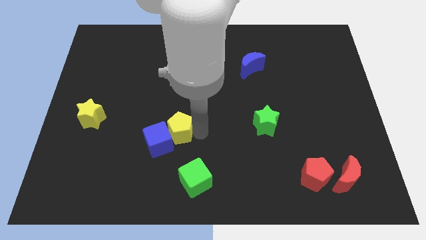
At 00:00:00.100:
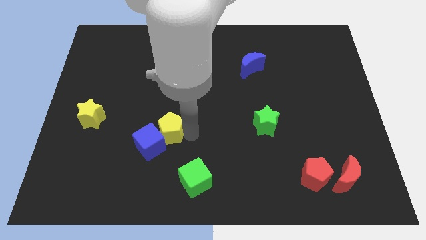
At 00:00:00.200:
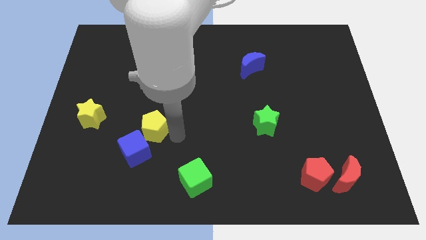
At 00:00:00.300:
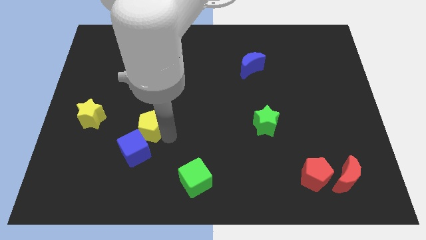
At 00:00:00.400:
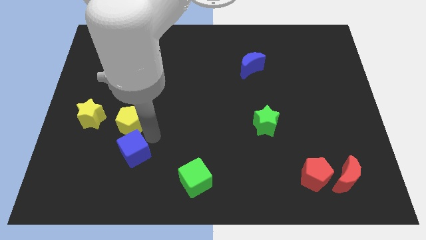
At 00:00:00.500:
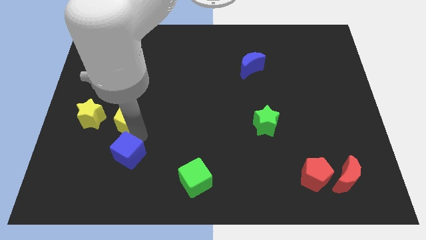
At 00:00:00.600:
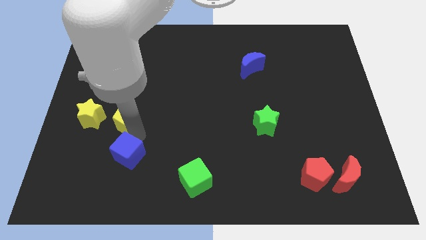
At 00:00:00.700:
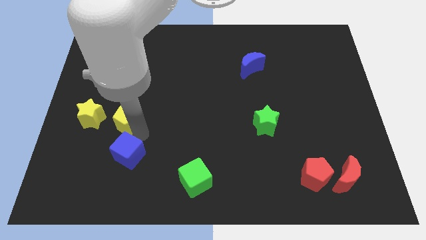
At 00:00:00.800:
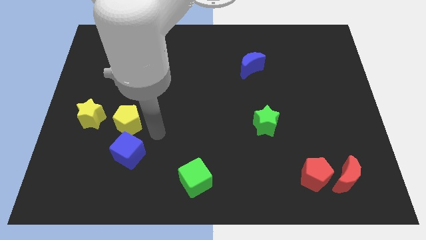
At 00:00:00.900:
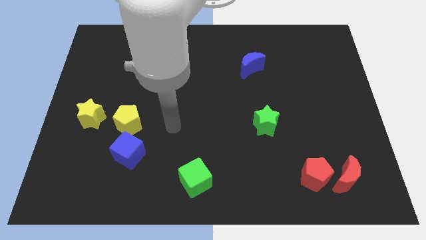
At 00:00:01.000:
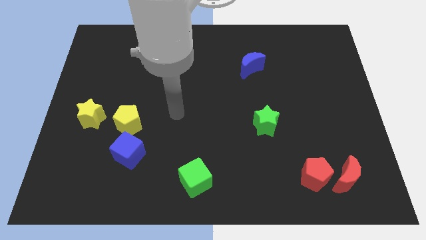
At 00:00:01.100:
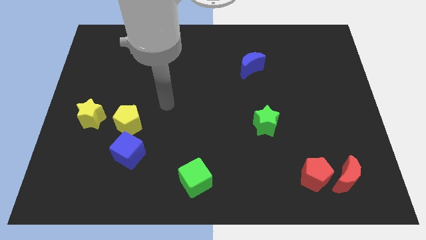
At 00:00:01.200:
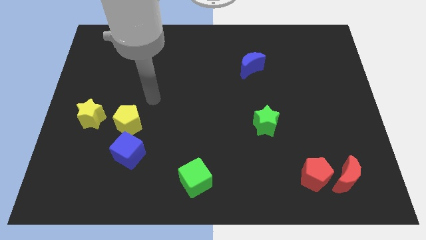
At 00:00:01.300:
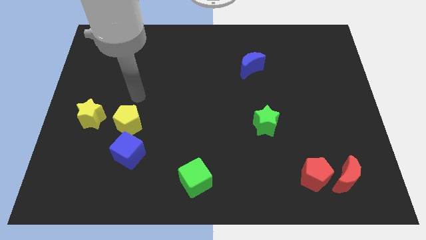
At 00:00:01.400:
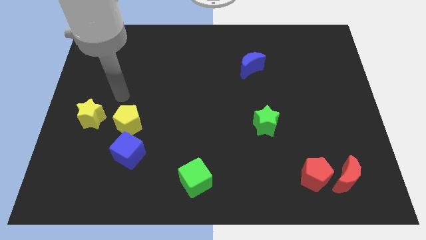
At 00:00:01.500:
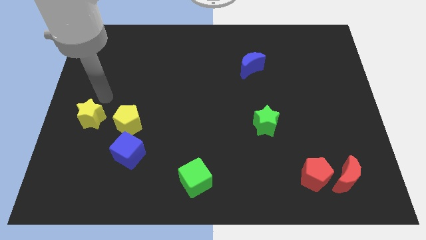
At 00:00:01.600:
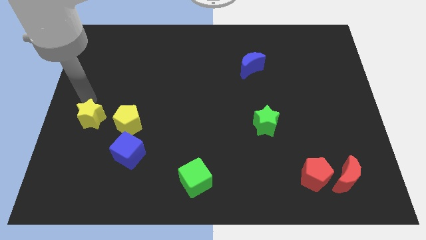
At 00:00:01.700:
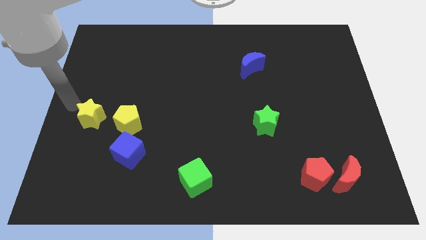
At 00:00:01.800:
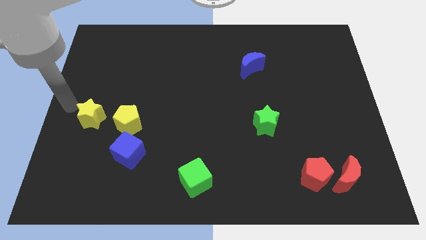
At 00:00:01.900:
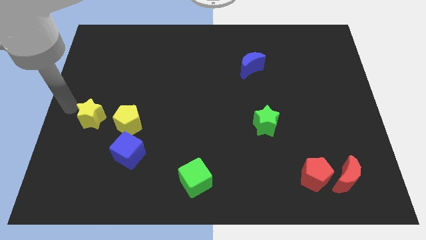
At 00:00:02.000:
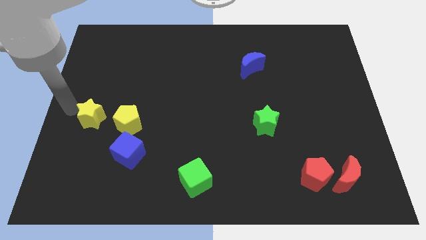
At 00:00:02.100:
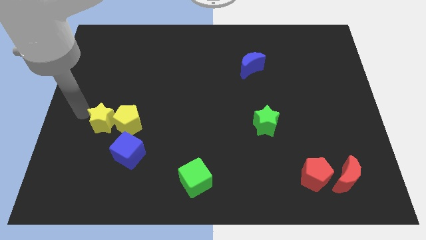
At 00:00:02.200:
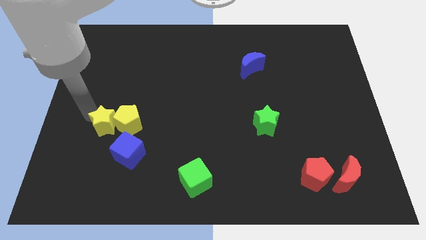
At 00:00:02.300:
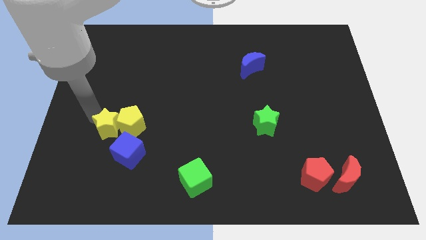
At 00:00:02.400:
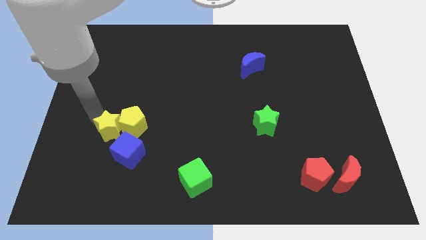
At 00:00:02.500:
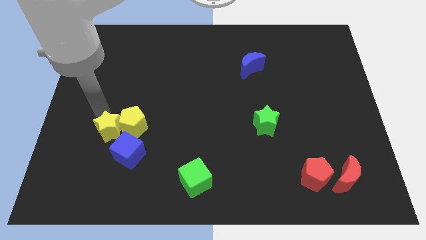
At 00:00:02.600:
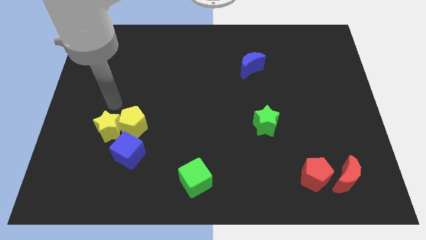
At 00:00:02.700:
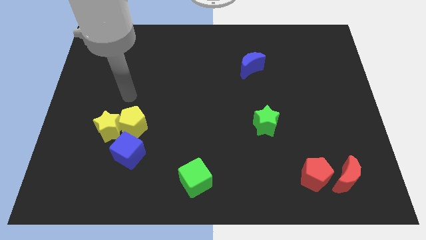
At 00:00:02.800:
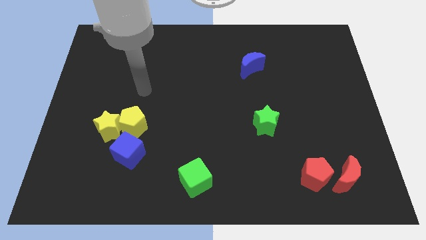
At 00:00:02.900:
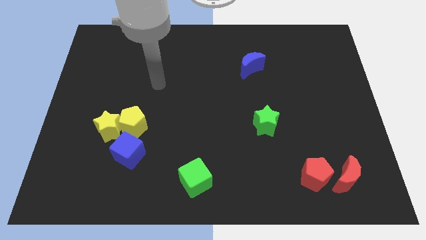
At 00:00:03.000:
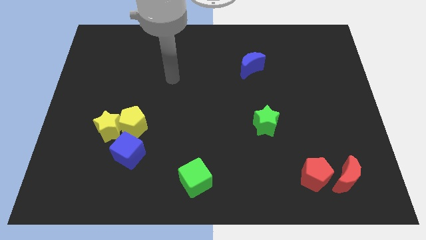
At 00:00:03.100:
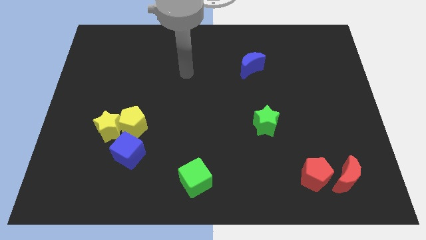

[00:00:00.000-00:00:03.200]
slide the yellow star into the yellow pentagon

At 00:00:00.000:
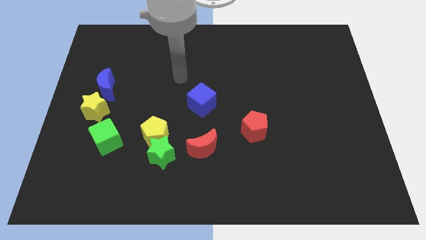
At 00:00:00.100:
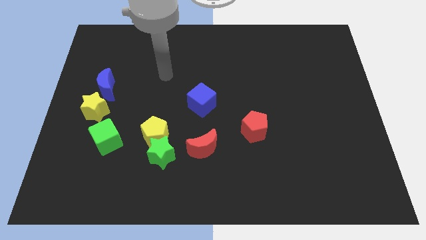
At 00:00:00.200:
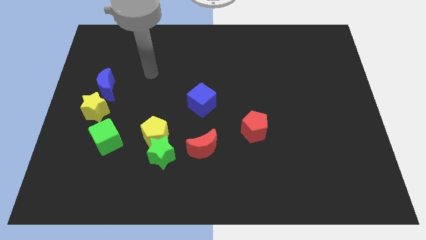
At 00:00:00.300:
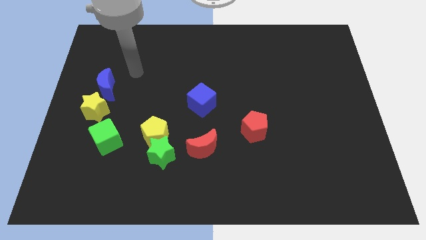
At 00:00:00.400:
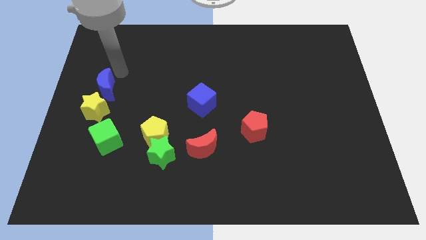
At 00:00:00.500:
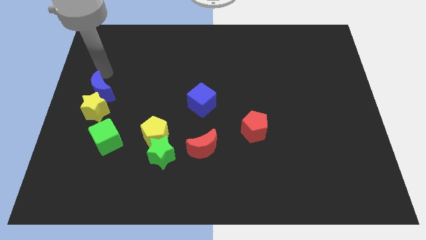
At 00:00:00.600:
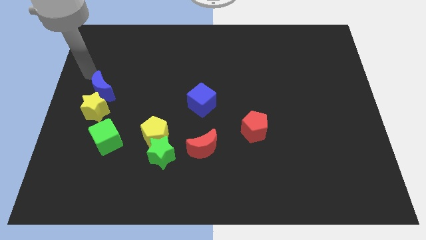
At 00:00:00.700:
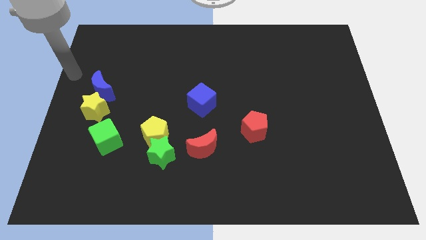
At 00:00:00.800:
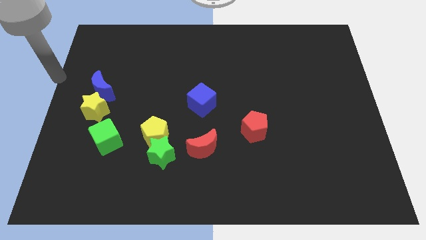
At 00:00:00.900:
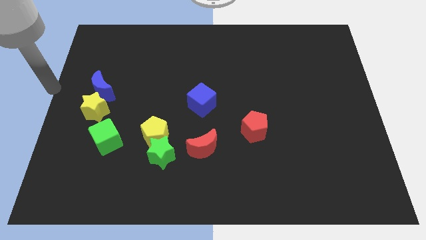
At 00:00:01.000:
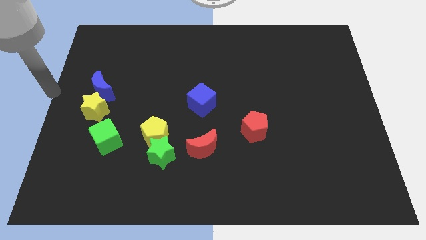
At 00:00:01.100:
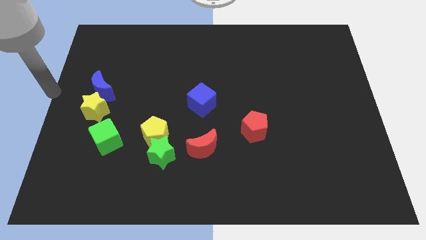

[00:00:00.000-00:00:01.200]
touch the blue moon

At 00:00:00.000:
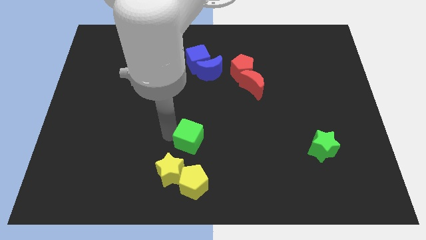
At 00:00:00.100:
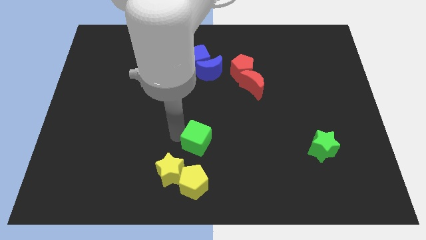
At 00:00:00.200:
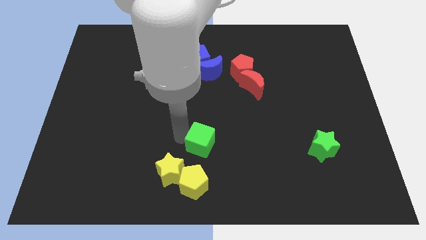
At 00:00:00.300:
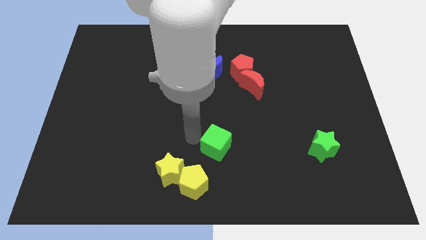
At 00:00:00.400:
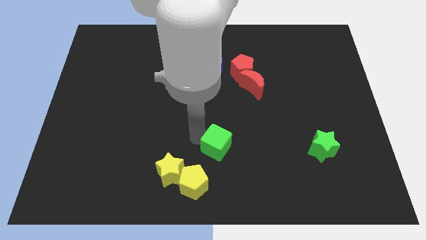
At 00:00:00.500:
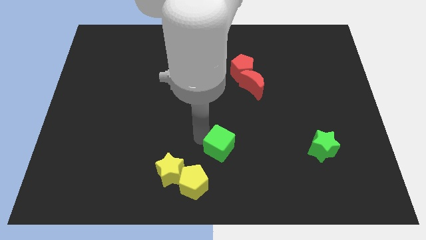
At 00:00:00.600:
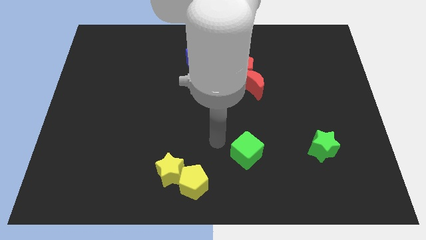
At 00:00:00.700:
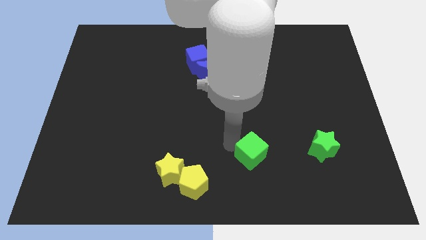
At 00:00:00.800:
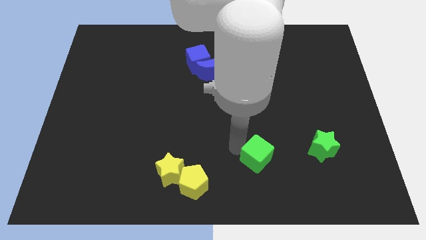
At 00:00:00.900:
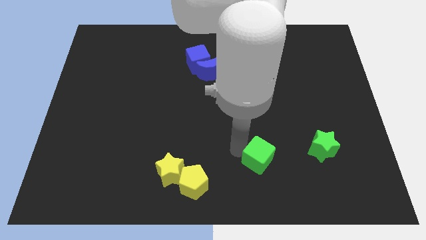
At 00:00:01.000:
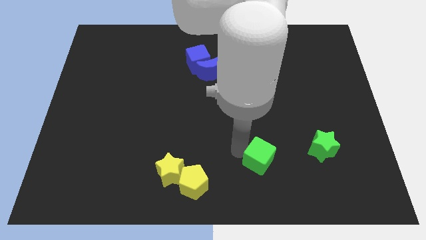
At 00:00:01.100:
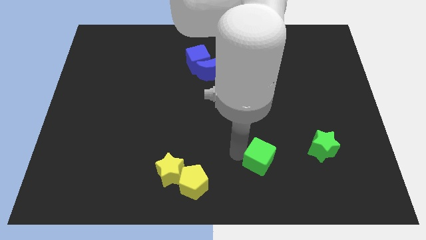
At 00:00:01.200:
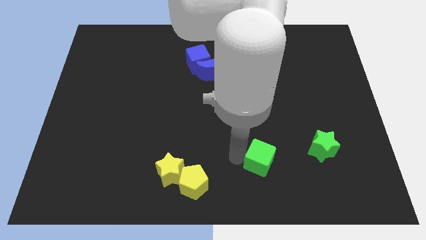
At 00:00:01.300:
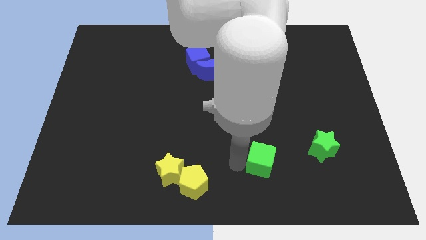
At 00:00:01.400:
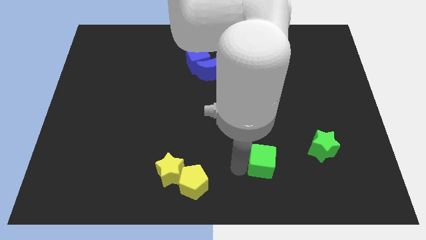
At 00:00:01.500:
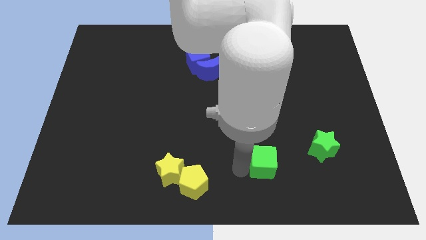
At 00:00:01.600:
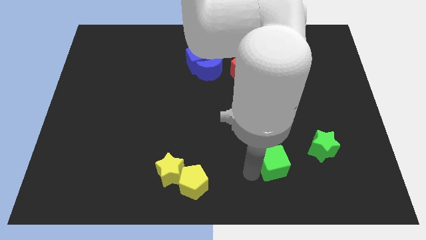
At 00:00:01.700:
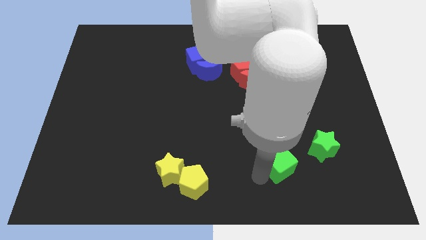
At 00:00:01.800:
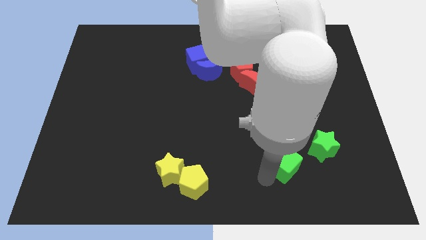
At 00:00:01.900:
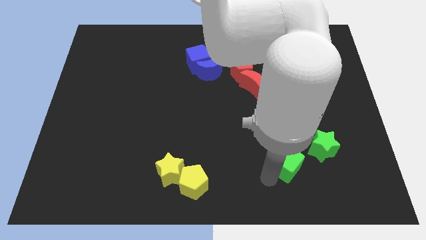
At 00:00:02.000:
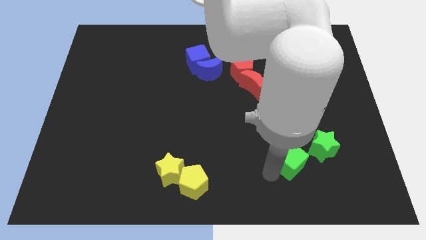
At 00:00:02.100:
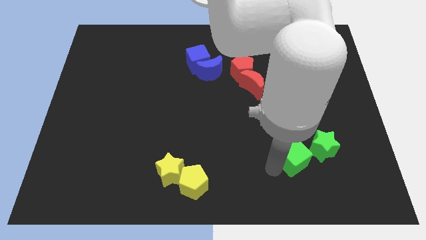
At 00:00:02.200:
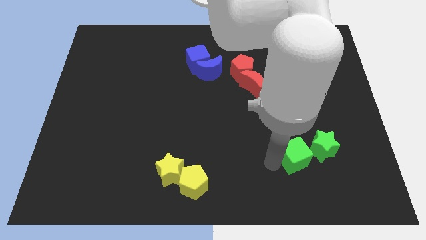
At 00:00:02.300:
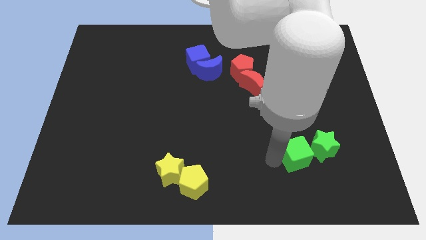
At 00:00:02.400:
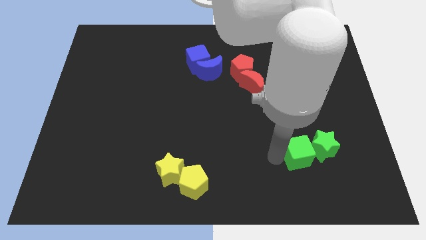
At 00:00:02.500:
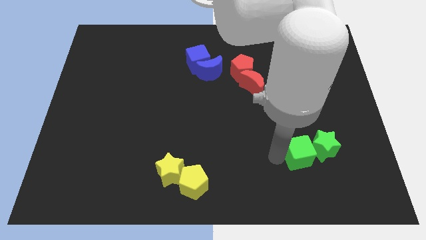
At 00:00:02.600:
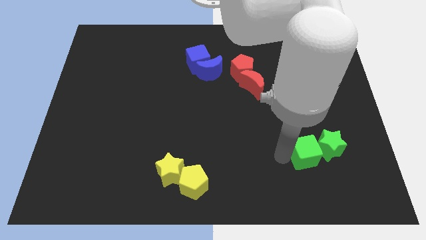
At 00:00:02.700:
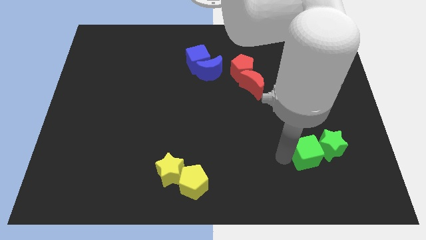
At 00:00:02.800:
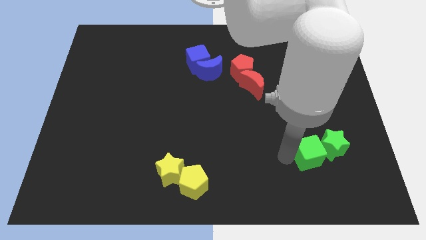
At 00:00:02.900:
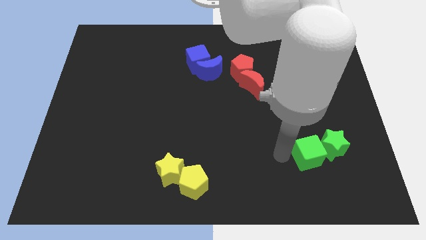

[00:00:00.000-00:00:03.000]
move the green cube into the green star

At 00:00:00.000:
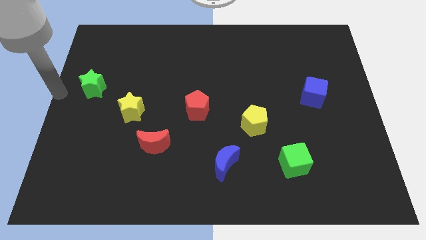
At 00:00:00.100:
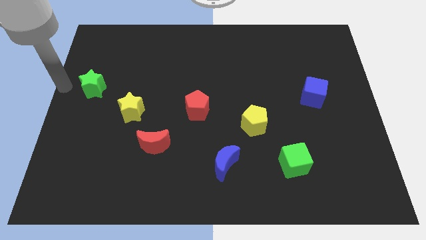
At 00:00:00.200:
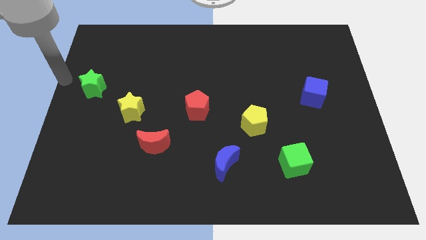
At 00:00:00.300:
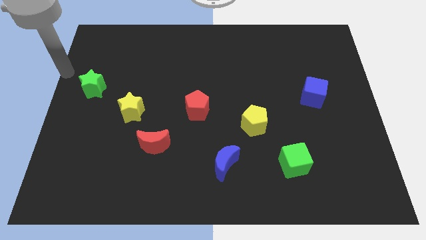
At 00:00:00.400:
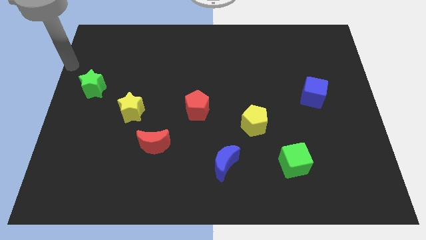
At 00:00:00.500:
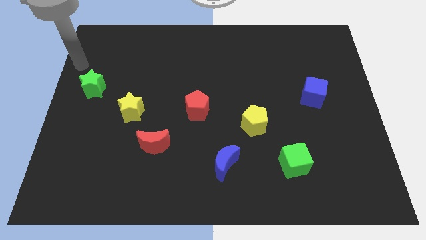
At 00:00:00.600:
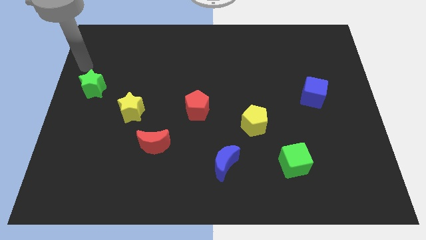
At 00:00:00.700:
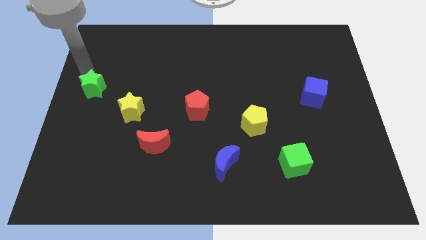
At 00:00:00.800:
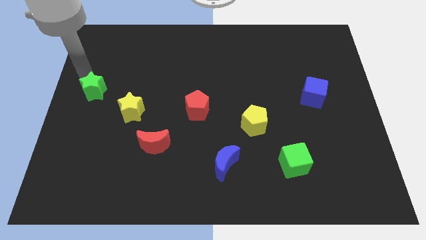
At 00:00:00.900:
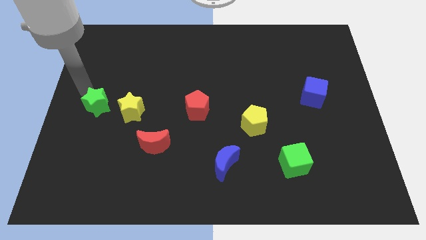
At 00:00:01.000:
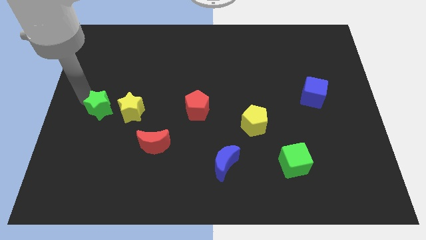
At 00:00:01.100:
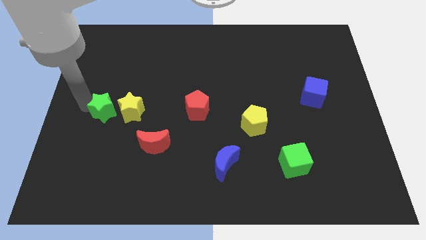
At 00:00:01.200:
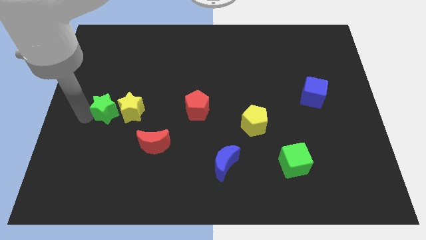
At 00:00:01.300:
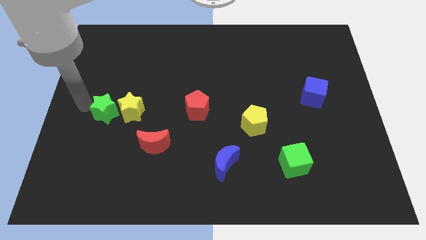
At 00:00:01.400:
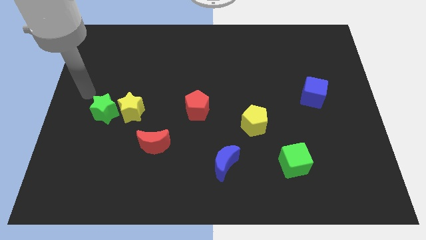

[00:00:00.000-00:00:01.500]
move the green star close to the left of the yellow star
